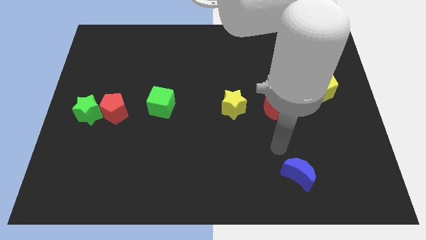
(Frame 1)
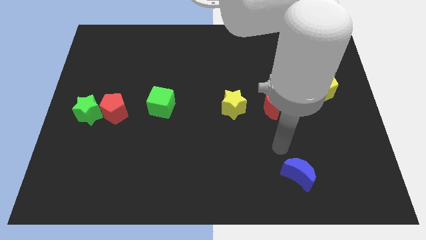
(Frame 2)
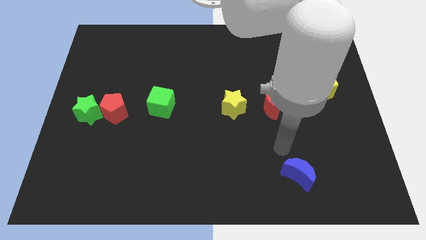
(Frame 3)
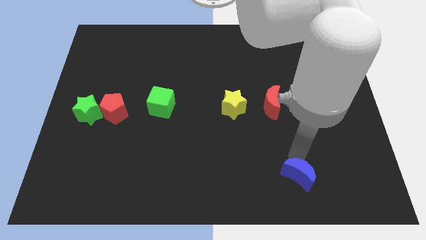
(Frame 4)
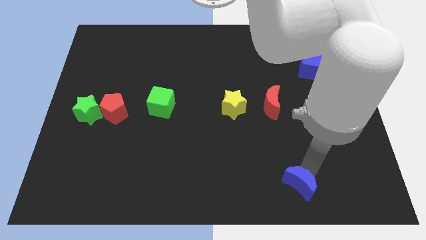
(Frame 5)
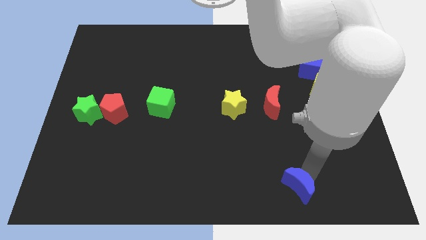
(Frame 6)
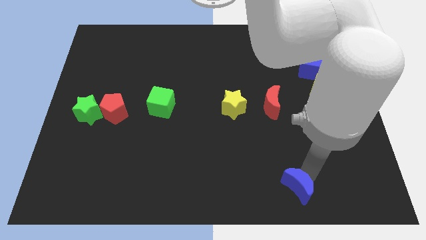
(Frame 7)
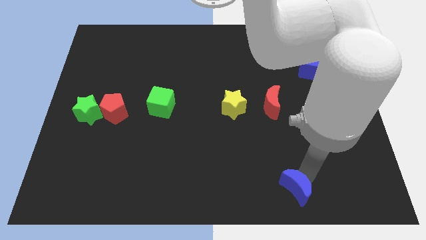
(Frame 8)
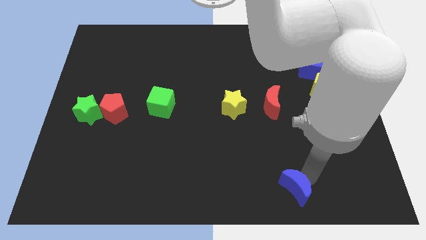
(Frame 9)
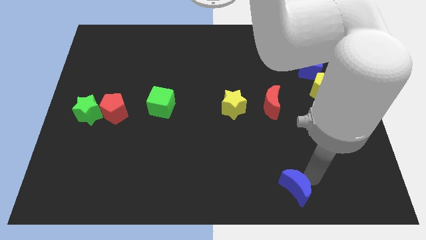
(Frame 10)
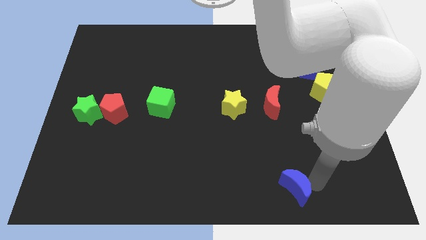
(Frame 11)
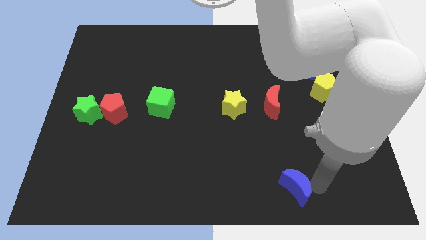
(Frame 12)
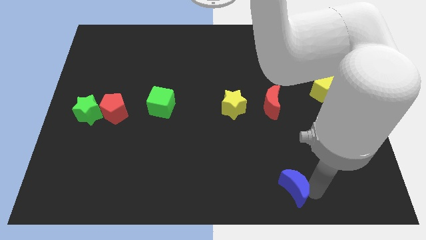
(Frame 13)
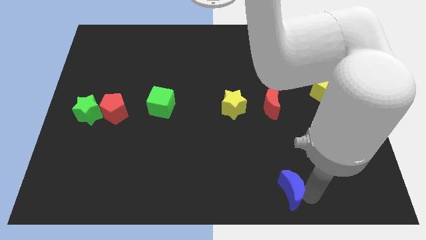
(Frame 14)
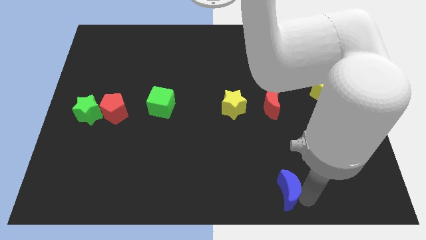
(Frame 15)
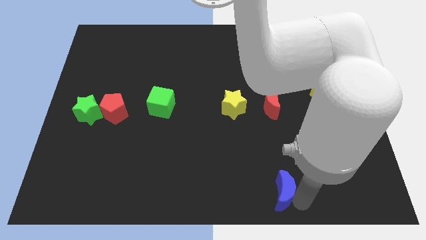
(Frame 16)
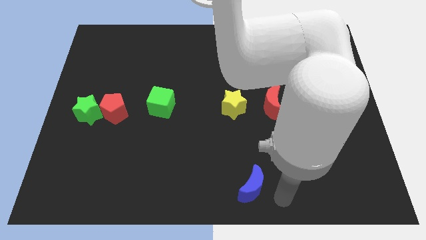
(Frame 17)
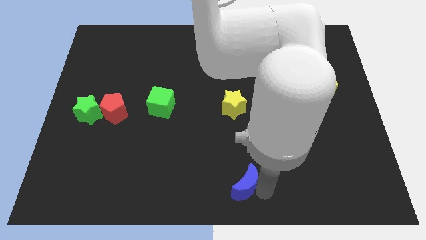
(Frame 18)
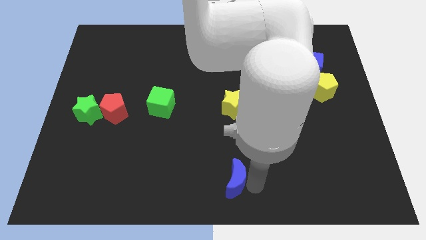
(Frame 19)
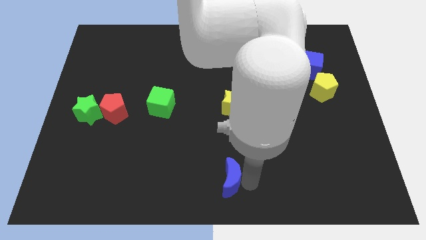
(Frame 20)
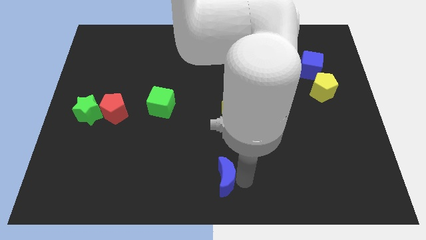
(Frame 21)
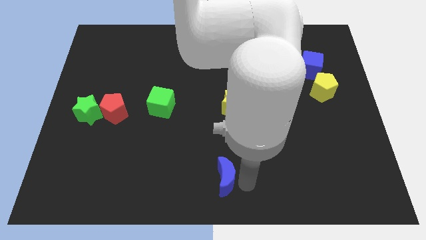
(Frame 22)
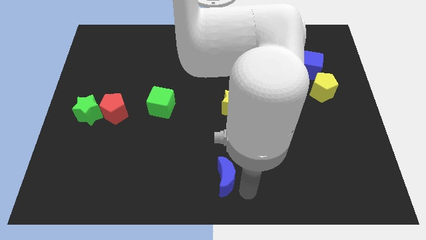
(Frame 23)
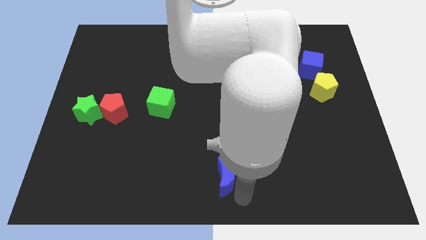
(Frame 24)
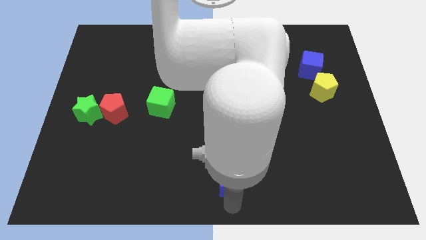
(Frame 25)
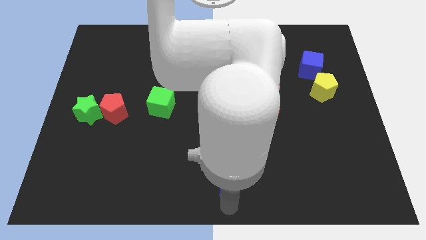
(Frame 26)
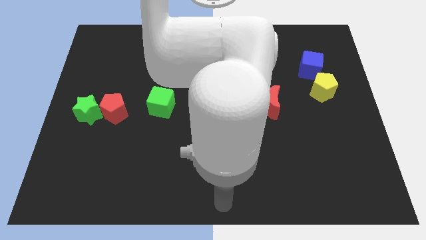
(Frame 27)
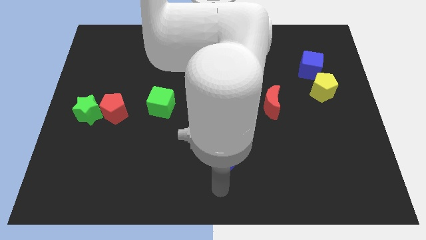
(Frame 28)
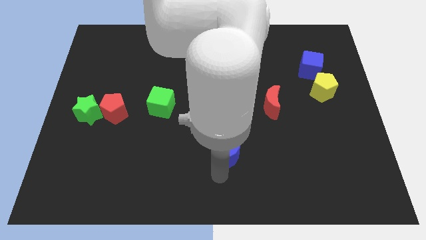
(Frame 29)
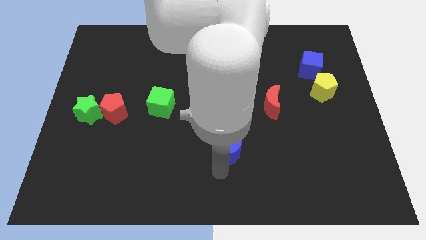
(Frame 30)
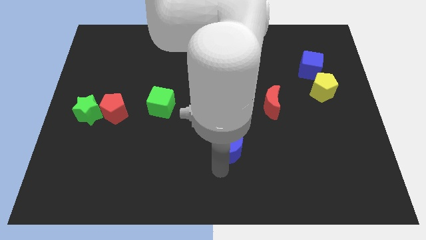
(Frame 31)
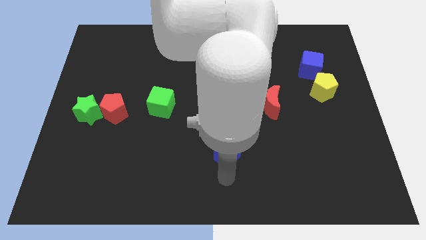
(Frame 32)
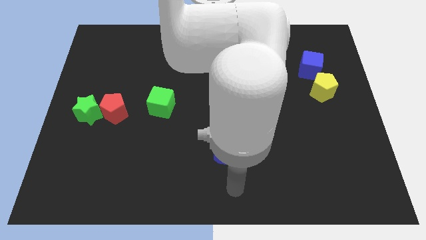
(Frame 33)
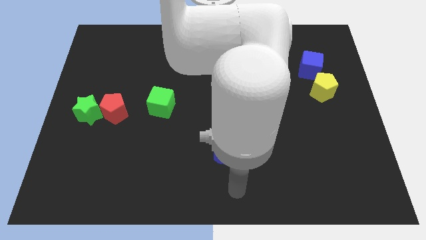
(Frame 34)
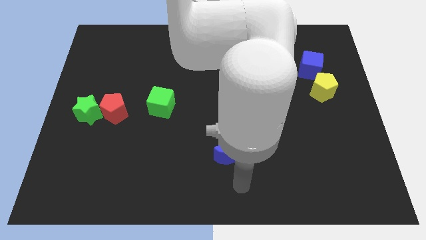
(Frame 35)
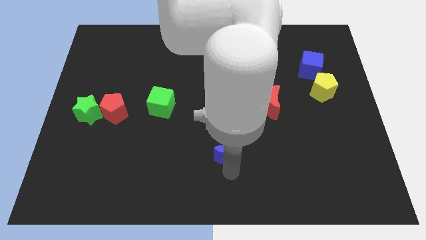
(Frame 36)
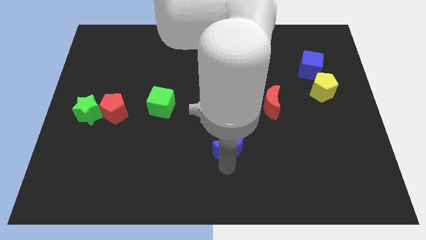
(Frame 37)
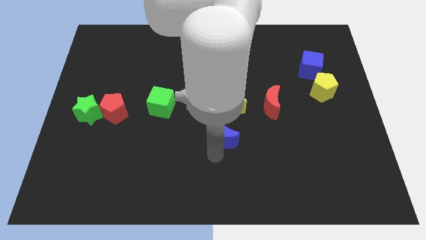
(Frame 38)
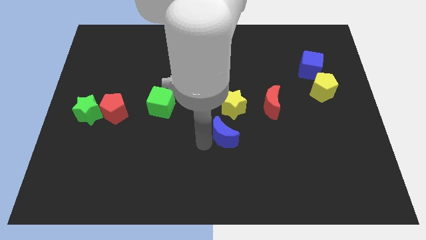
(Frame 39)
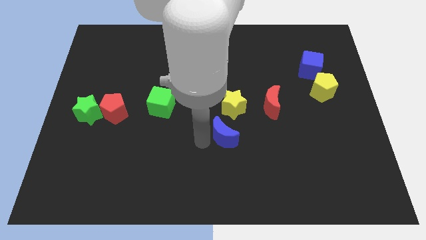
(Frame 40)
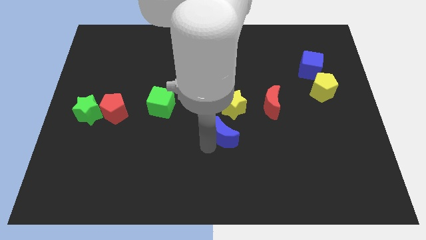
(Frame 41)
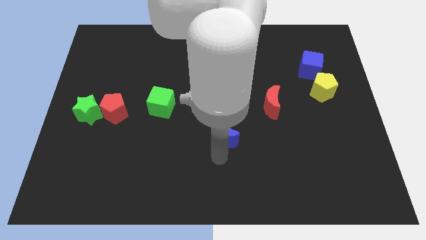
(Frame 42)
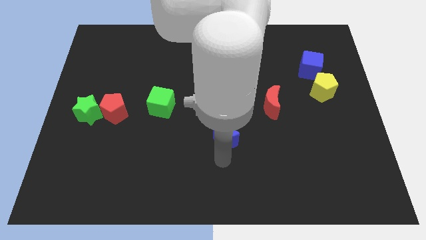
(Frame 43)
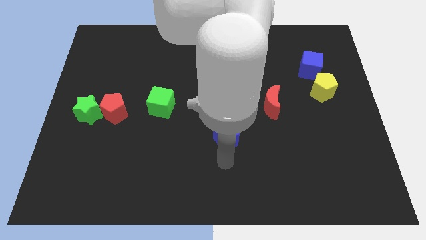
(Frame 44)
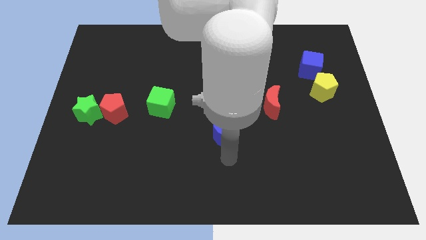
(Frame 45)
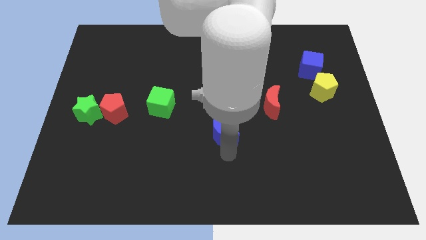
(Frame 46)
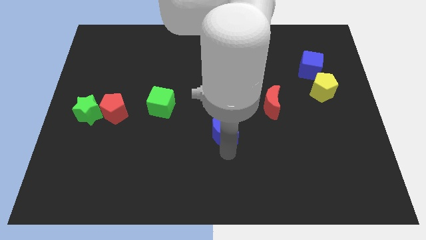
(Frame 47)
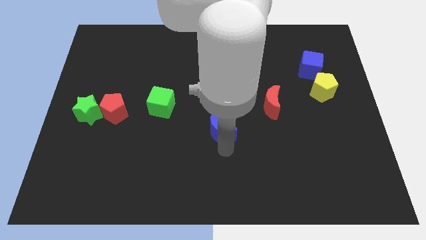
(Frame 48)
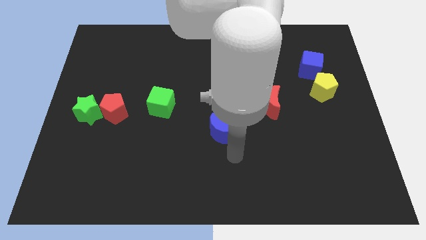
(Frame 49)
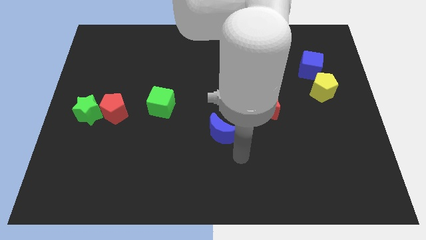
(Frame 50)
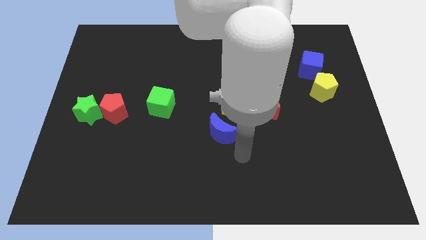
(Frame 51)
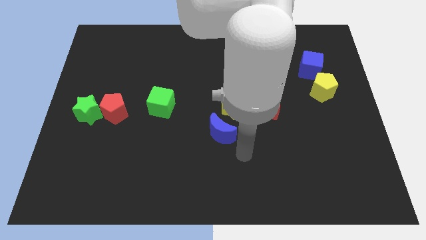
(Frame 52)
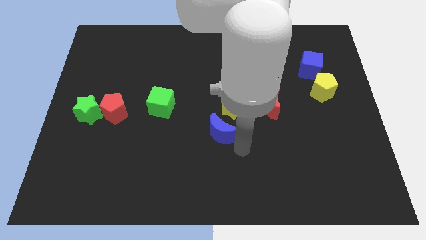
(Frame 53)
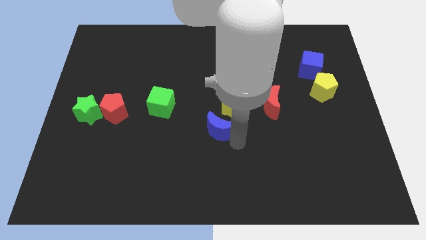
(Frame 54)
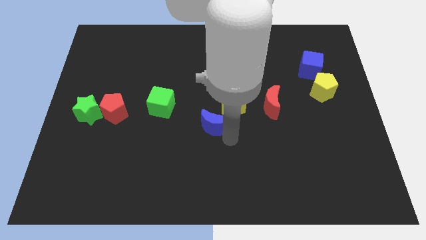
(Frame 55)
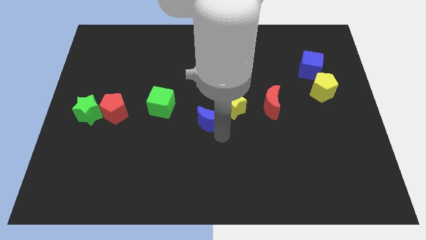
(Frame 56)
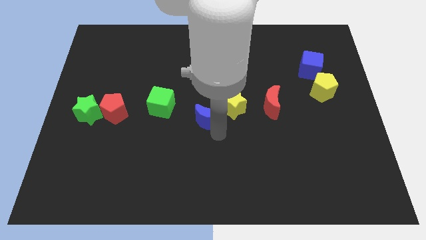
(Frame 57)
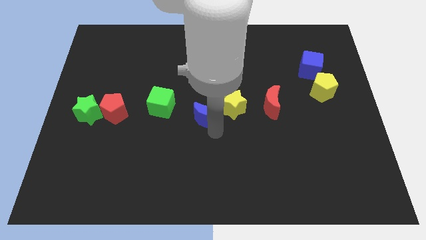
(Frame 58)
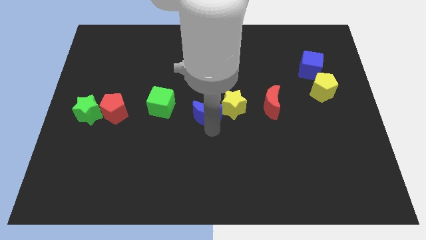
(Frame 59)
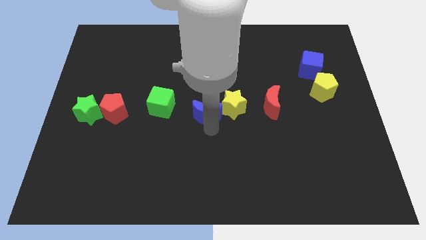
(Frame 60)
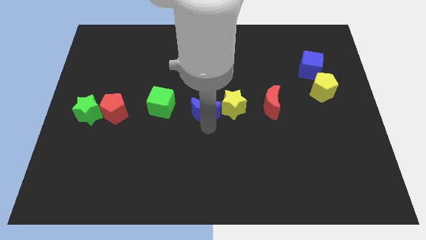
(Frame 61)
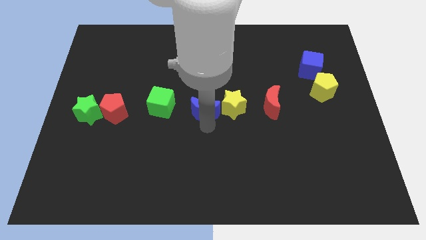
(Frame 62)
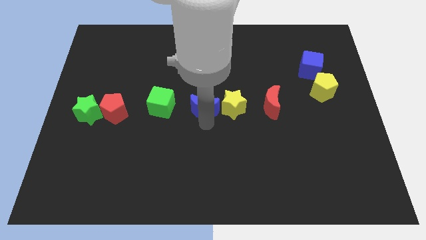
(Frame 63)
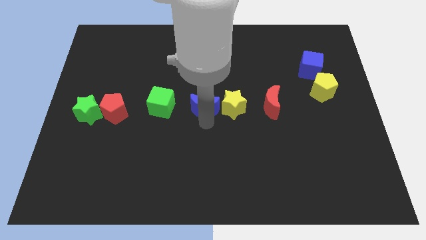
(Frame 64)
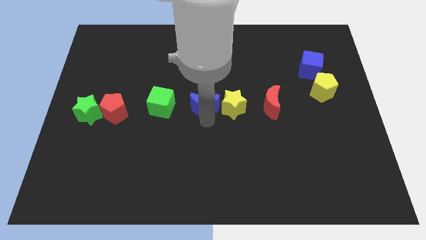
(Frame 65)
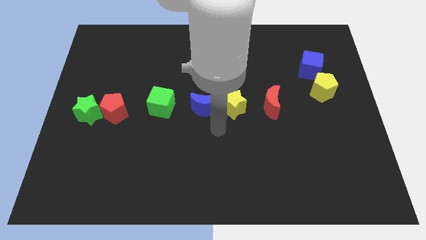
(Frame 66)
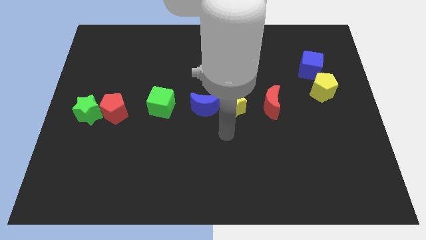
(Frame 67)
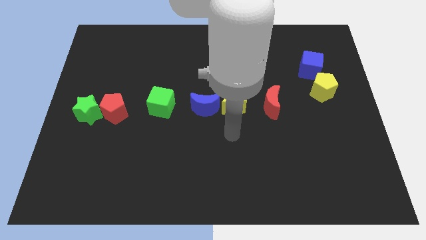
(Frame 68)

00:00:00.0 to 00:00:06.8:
move blue moon in between of green cube yellow star

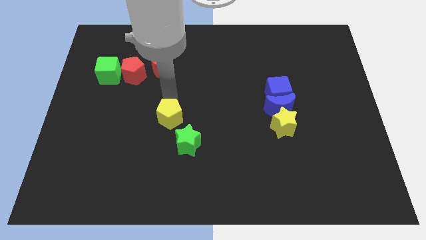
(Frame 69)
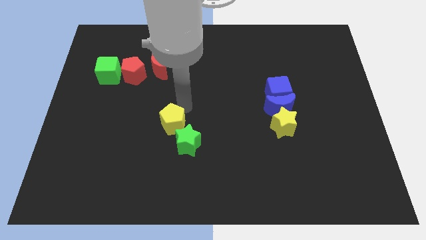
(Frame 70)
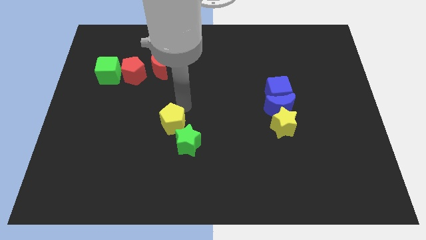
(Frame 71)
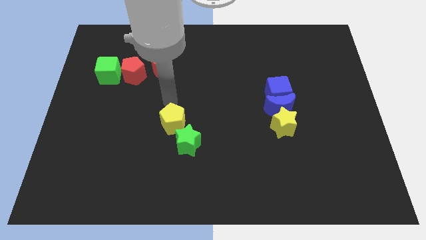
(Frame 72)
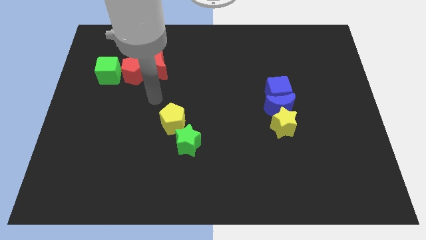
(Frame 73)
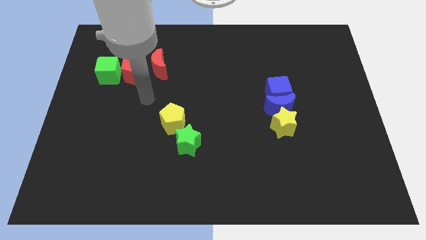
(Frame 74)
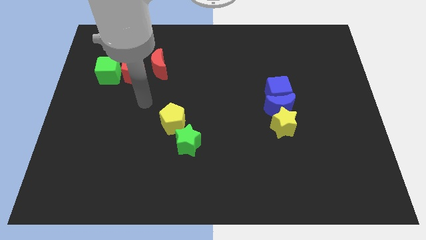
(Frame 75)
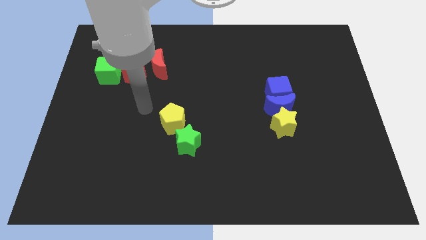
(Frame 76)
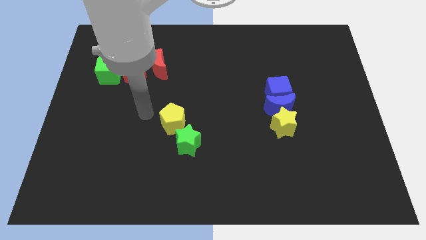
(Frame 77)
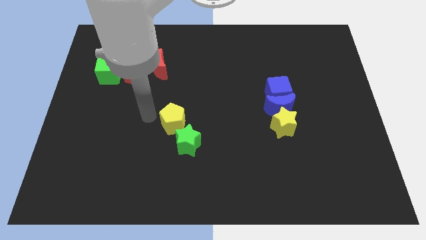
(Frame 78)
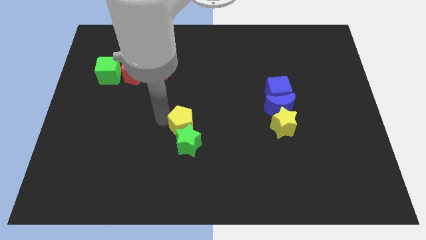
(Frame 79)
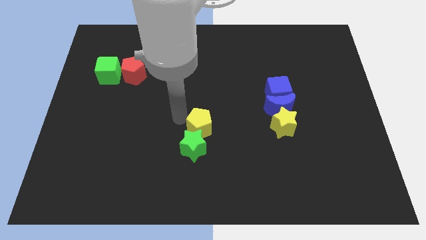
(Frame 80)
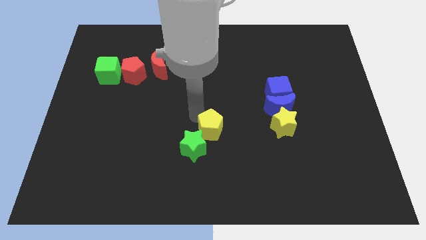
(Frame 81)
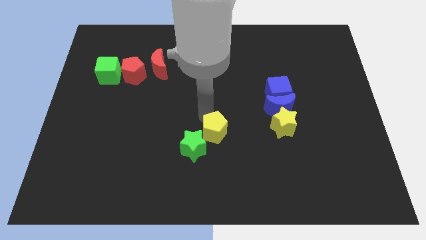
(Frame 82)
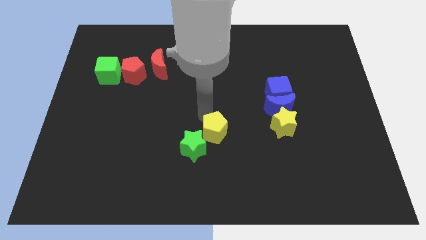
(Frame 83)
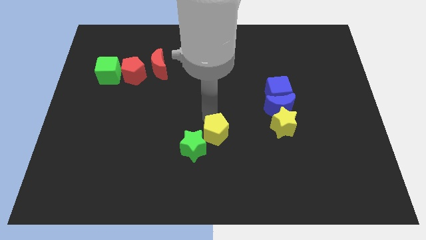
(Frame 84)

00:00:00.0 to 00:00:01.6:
drag the yellow pentagon diagonally top right to the green star

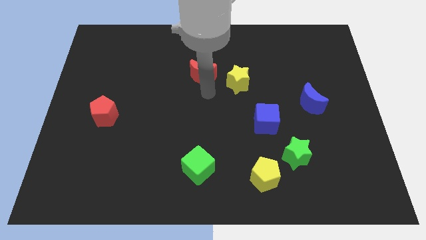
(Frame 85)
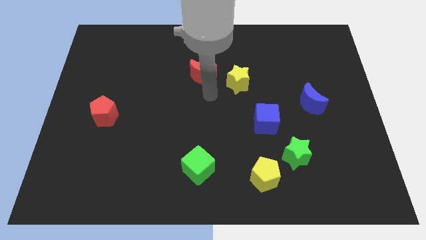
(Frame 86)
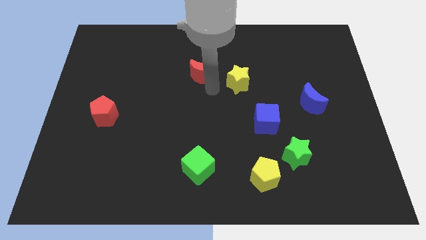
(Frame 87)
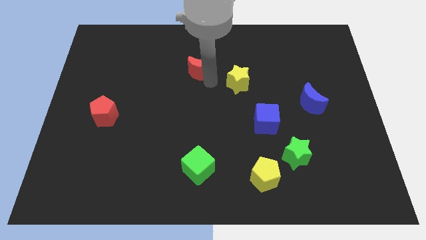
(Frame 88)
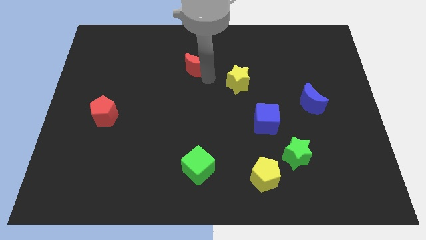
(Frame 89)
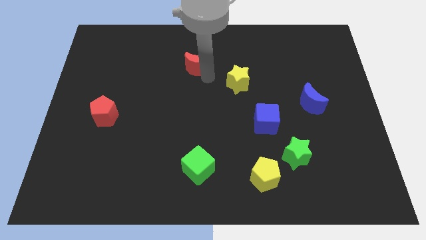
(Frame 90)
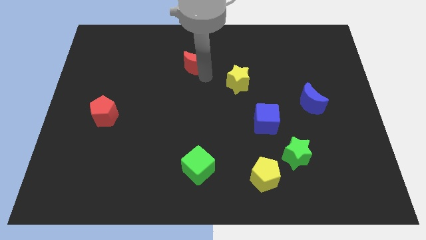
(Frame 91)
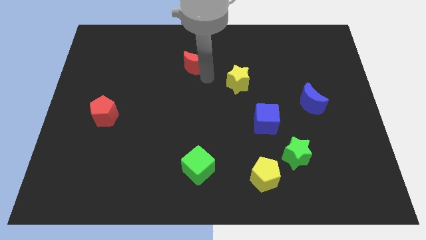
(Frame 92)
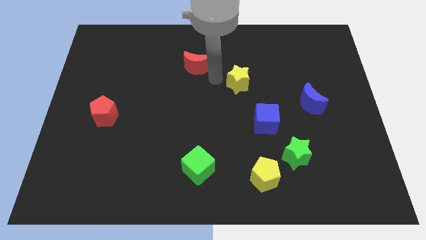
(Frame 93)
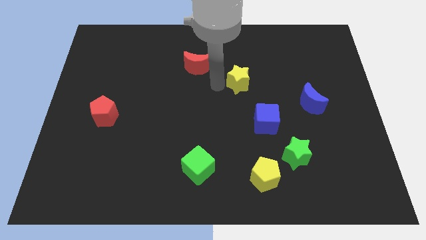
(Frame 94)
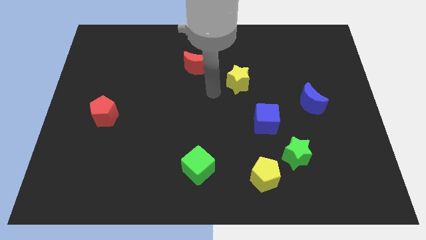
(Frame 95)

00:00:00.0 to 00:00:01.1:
push the red moon slightly towards top
